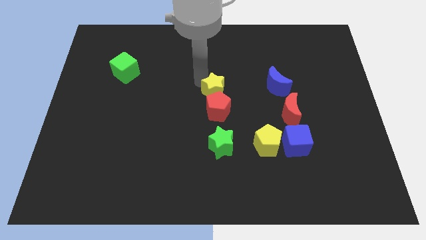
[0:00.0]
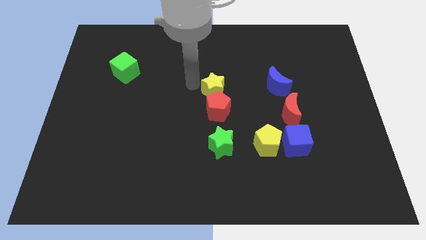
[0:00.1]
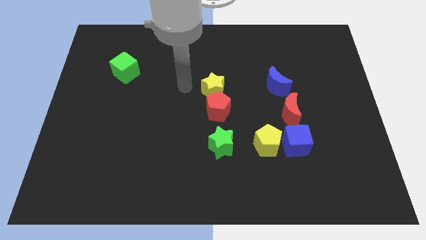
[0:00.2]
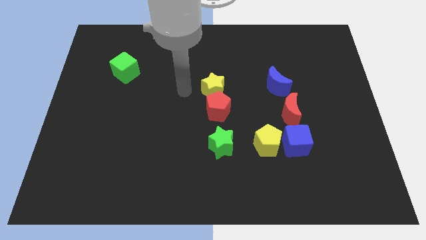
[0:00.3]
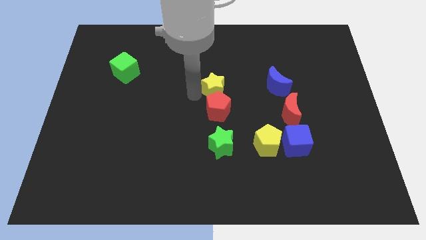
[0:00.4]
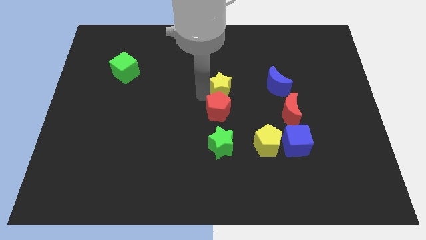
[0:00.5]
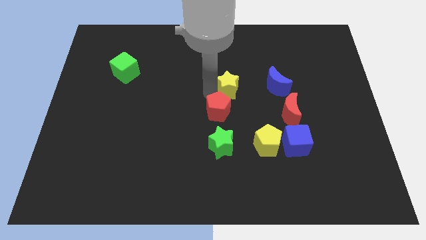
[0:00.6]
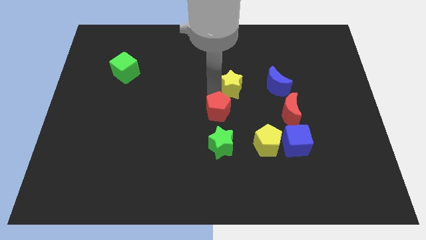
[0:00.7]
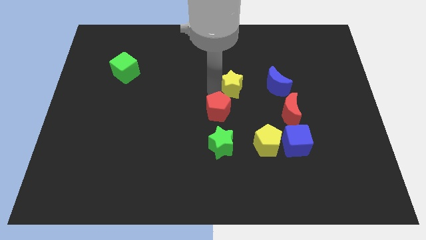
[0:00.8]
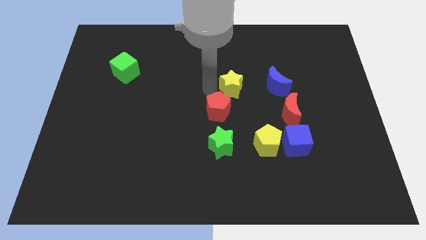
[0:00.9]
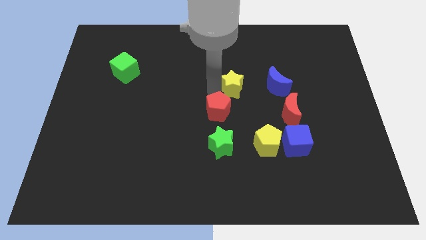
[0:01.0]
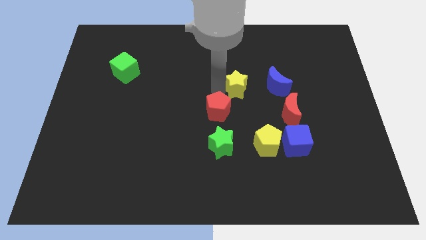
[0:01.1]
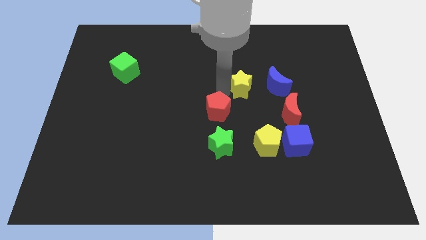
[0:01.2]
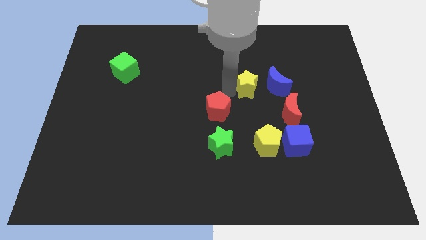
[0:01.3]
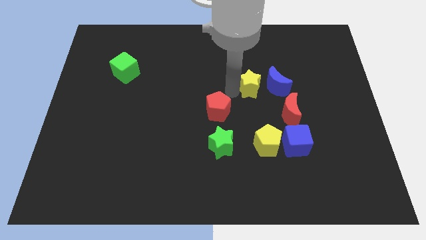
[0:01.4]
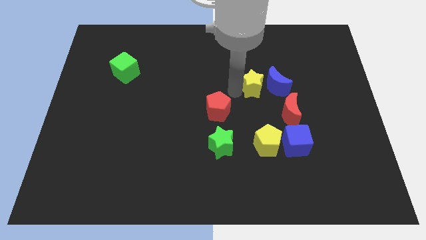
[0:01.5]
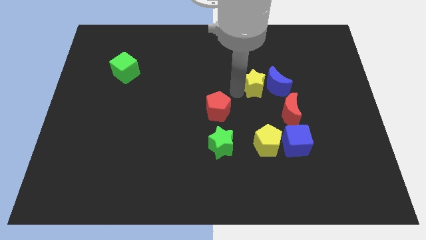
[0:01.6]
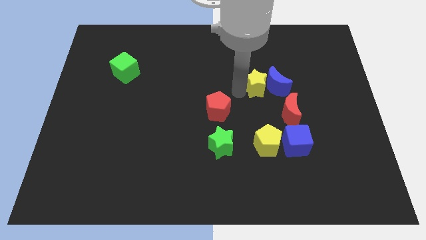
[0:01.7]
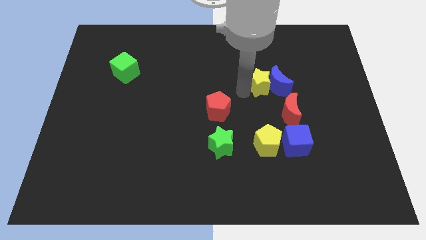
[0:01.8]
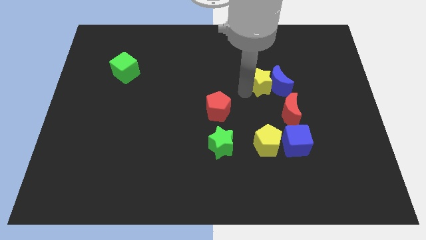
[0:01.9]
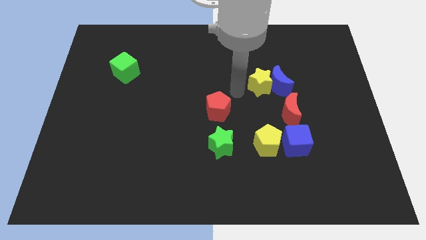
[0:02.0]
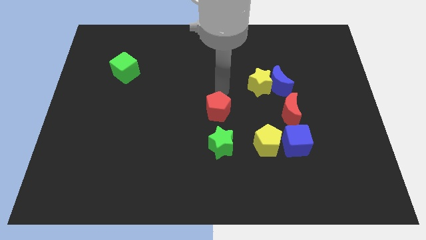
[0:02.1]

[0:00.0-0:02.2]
move the yellow star into the blue moon

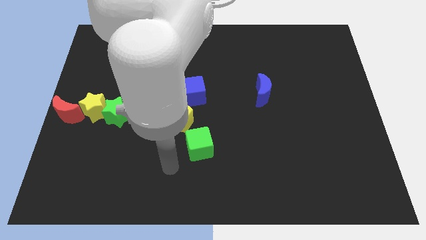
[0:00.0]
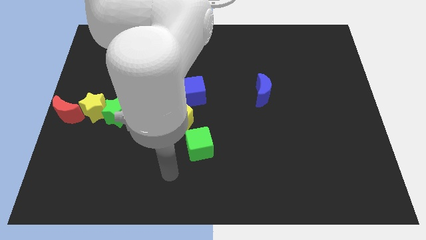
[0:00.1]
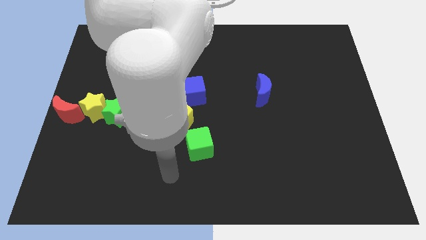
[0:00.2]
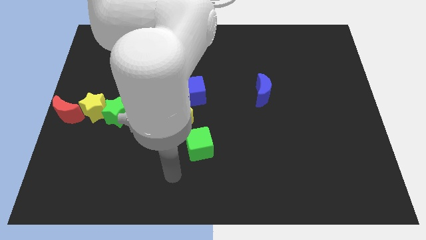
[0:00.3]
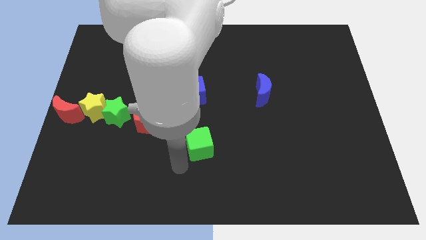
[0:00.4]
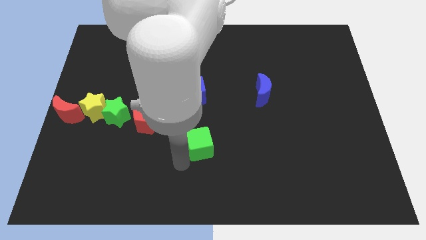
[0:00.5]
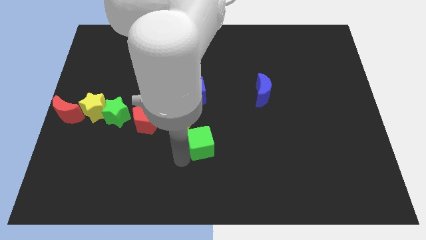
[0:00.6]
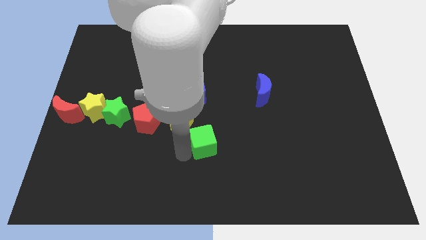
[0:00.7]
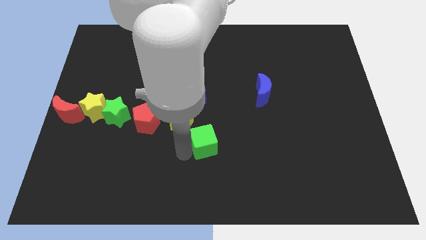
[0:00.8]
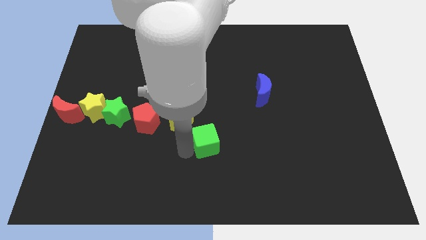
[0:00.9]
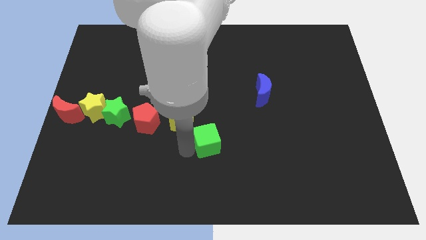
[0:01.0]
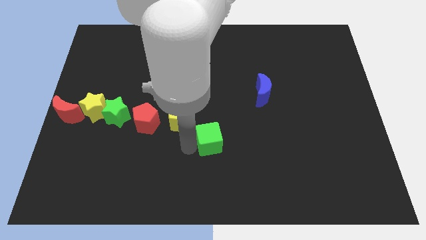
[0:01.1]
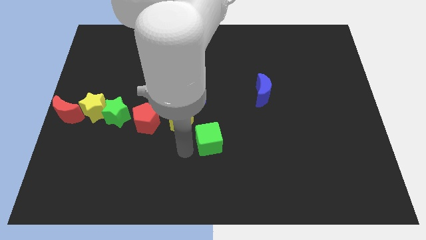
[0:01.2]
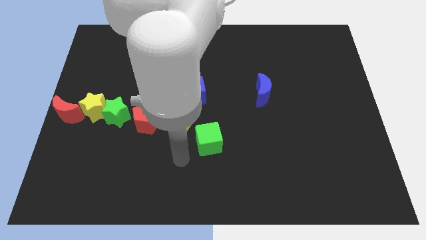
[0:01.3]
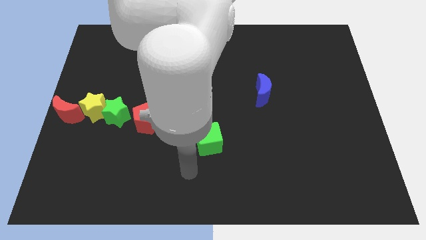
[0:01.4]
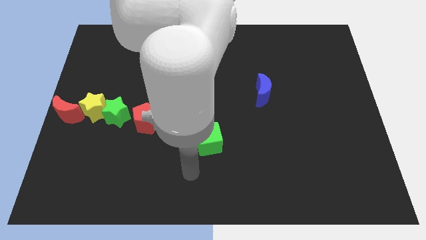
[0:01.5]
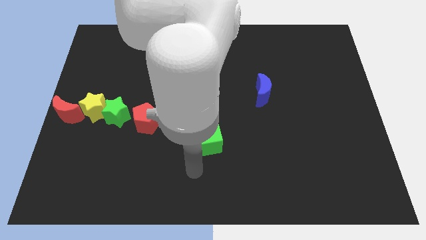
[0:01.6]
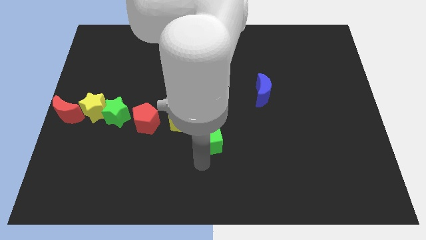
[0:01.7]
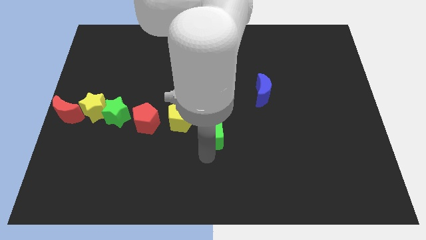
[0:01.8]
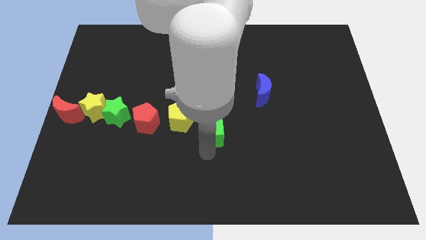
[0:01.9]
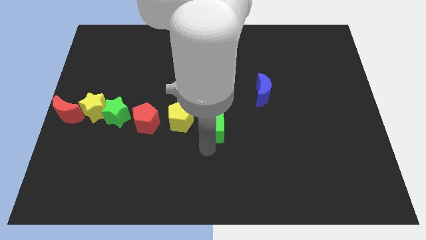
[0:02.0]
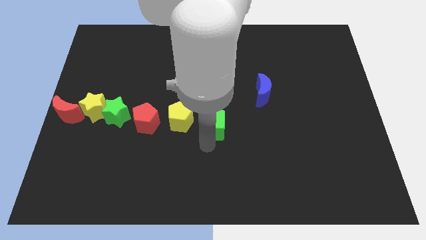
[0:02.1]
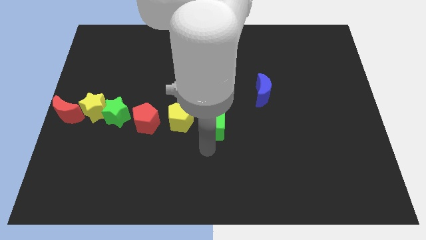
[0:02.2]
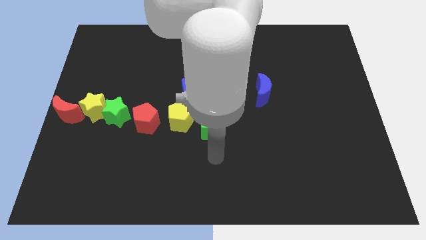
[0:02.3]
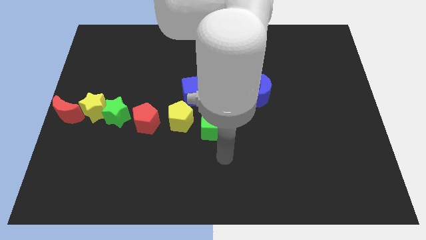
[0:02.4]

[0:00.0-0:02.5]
move the green cube to the right of yellow pentagon

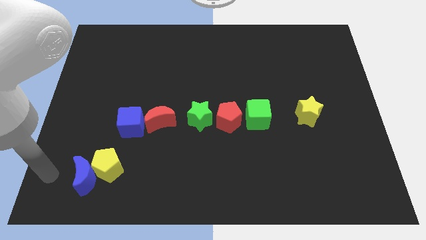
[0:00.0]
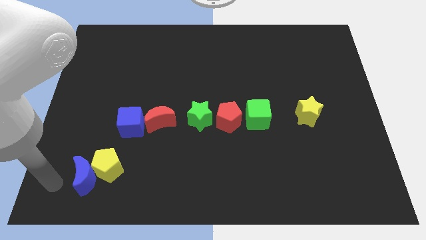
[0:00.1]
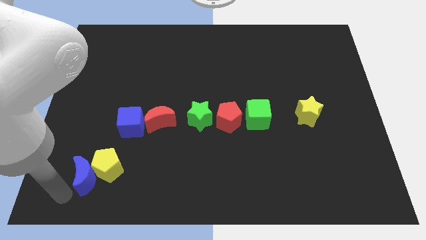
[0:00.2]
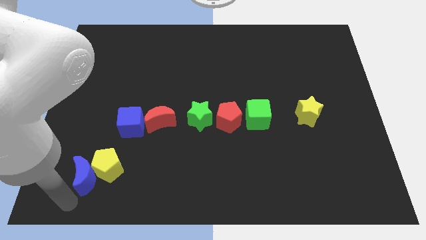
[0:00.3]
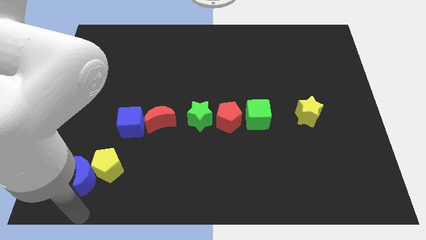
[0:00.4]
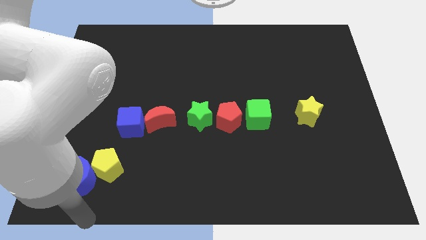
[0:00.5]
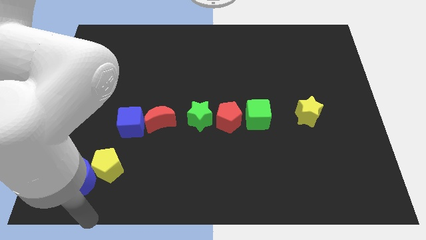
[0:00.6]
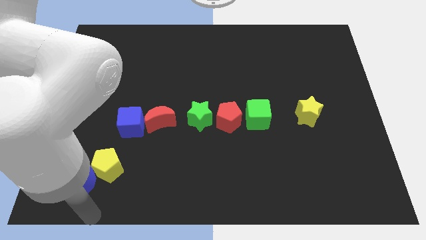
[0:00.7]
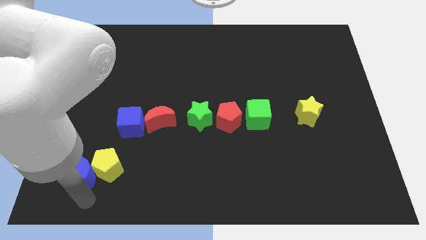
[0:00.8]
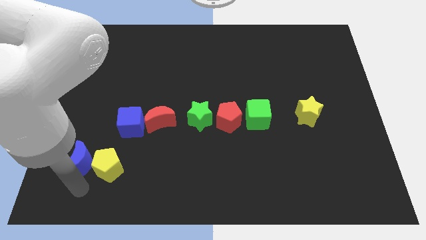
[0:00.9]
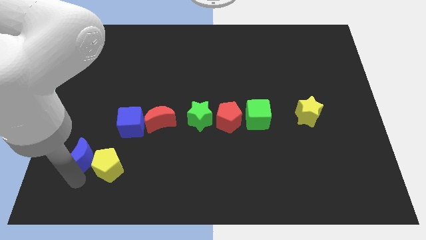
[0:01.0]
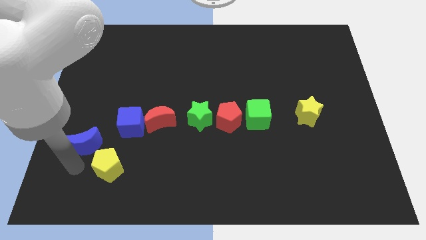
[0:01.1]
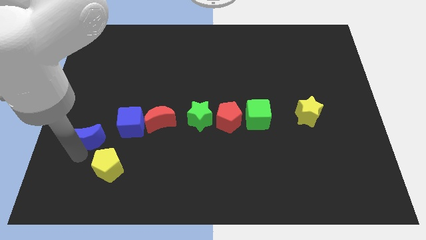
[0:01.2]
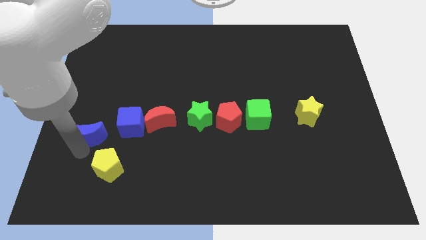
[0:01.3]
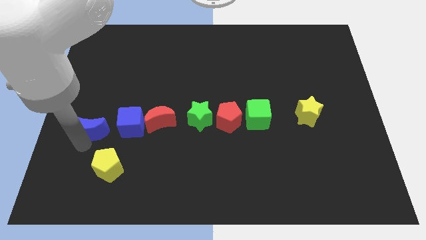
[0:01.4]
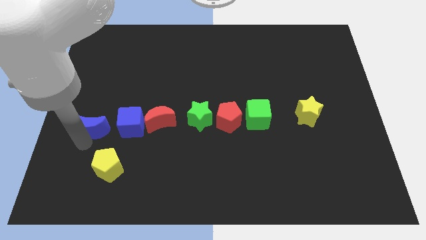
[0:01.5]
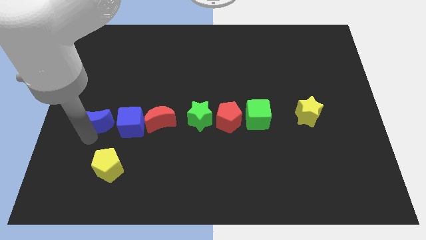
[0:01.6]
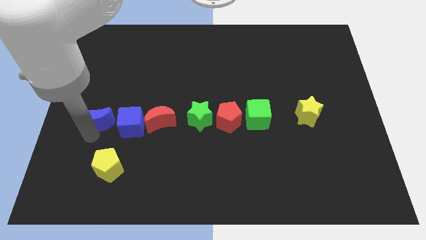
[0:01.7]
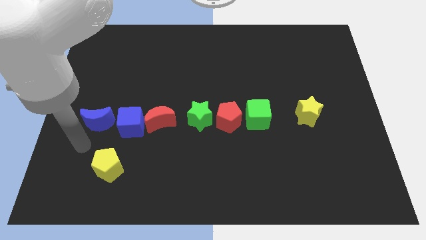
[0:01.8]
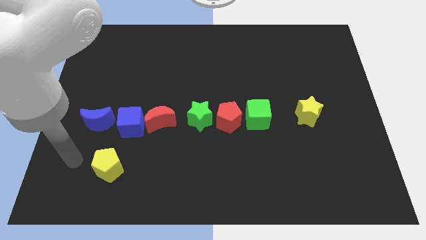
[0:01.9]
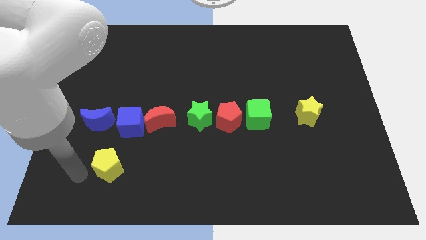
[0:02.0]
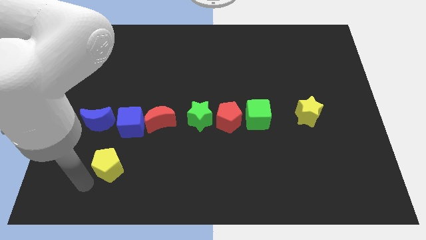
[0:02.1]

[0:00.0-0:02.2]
separate blue moon from yellow pentagon

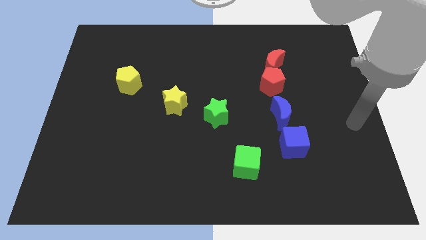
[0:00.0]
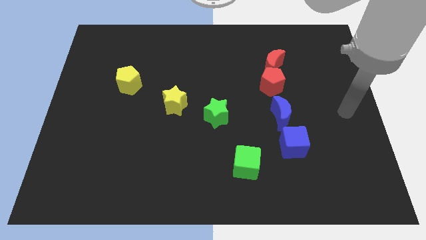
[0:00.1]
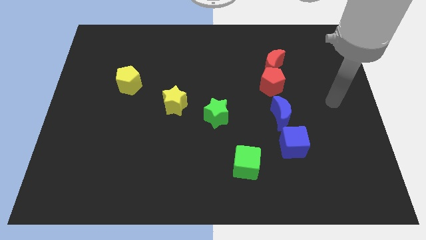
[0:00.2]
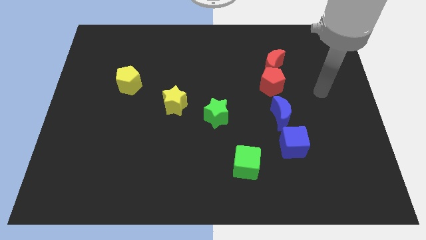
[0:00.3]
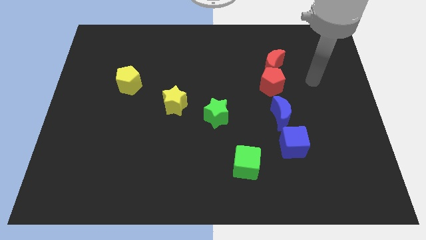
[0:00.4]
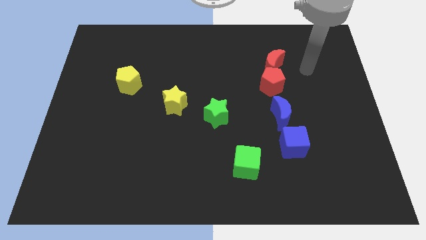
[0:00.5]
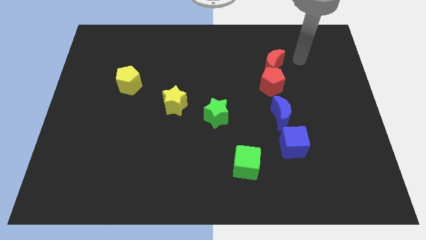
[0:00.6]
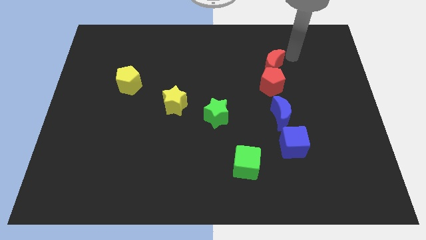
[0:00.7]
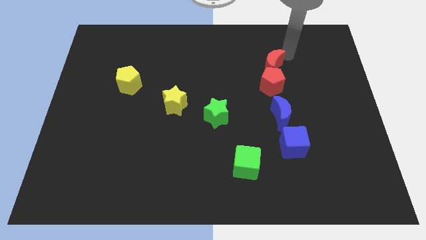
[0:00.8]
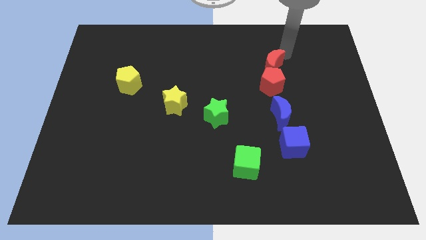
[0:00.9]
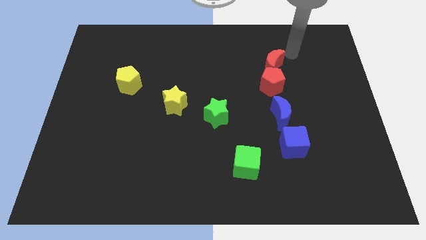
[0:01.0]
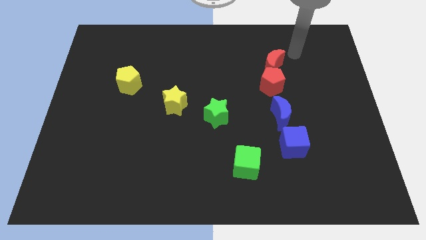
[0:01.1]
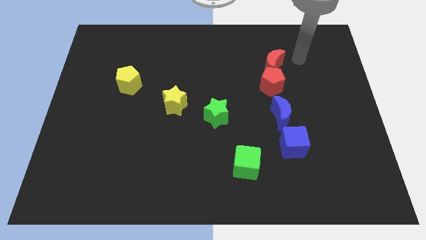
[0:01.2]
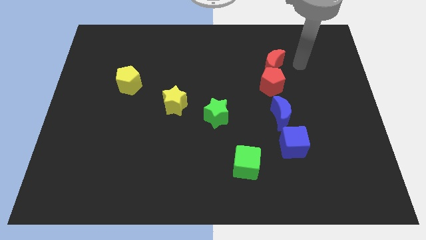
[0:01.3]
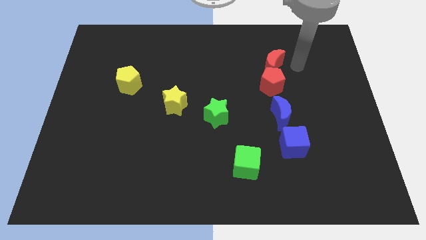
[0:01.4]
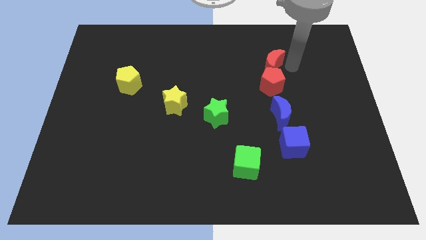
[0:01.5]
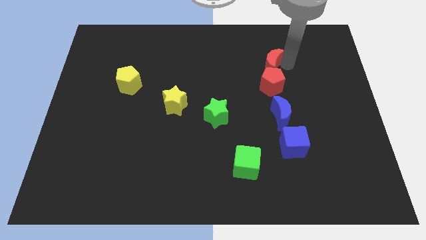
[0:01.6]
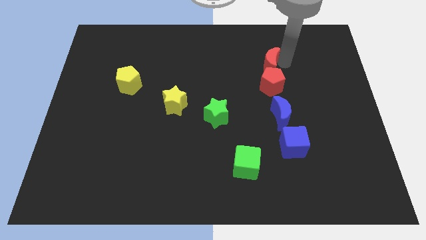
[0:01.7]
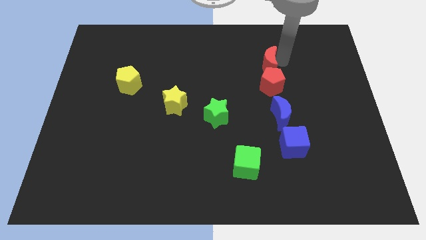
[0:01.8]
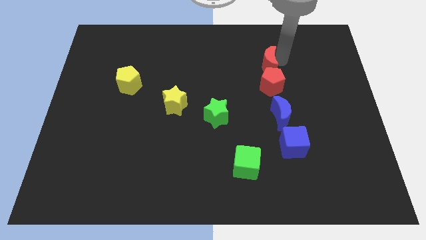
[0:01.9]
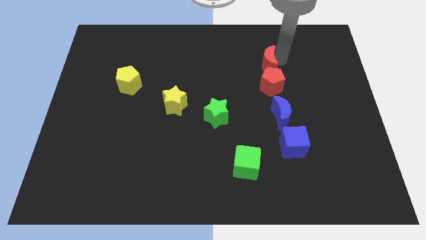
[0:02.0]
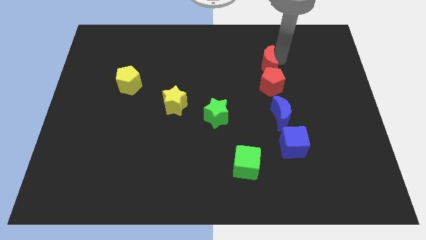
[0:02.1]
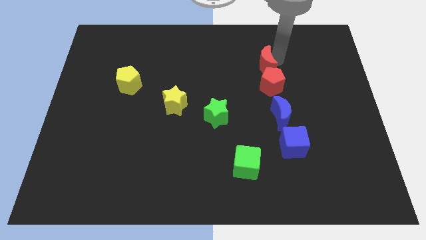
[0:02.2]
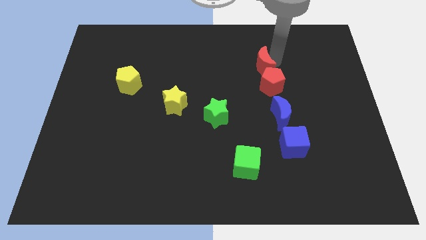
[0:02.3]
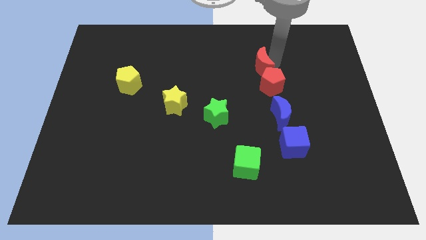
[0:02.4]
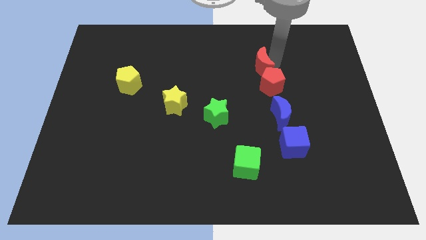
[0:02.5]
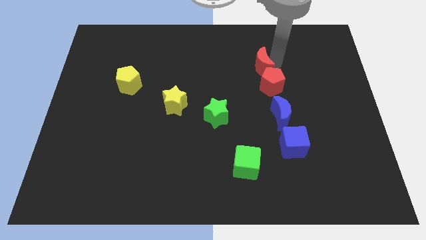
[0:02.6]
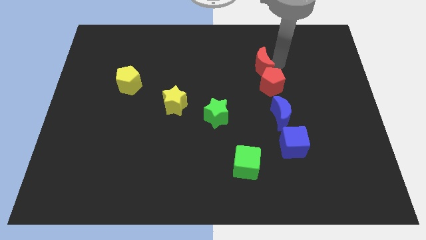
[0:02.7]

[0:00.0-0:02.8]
move the red crescent slightly towards left
